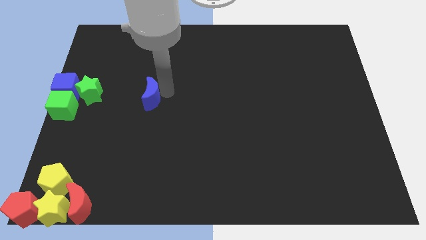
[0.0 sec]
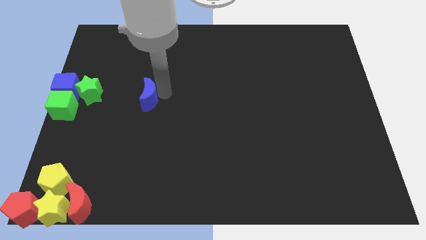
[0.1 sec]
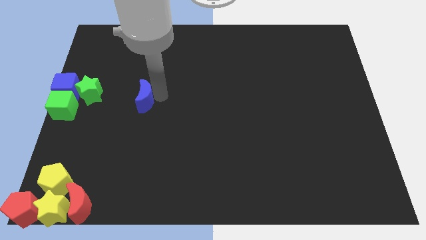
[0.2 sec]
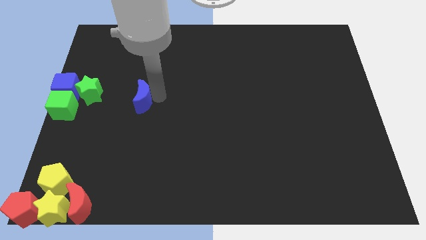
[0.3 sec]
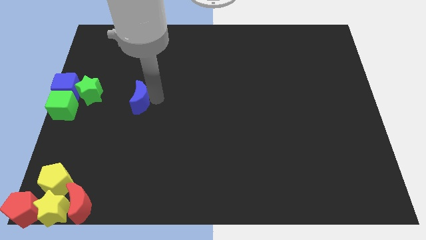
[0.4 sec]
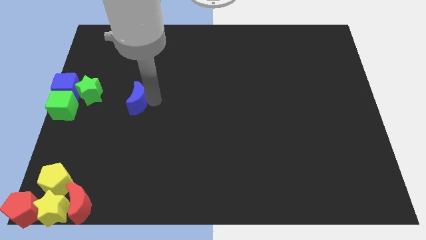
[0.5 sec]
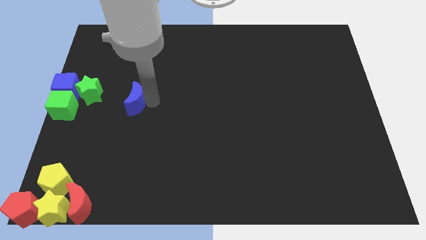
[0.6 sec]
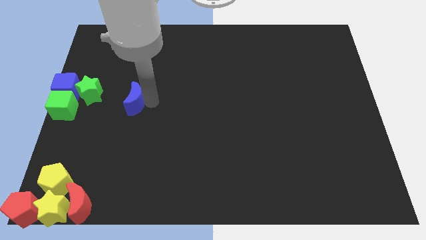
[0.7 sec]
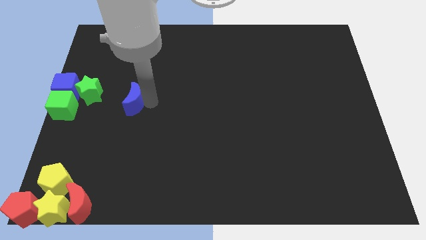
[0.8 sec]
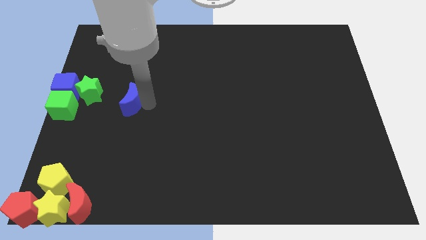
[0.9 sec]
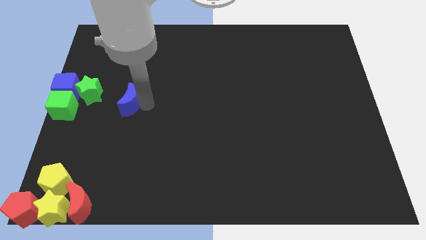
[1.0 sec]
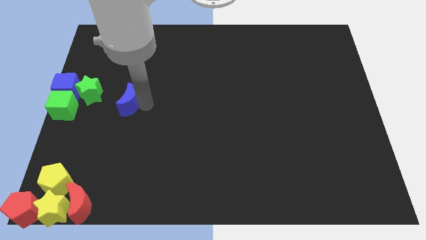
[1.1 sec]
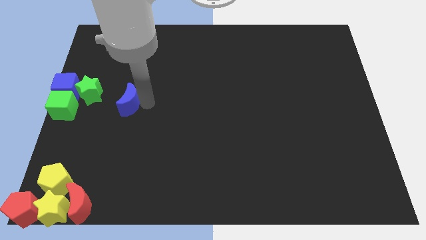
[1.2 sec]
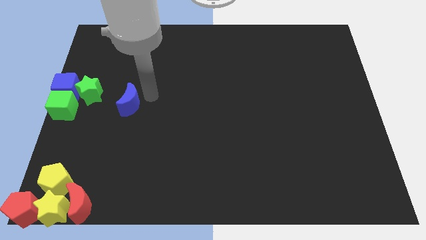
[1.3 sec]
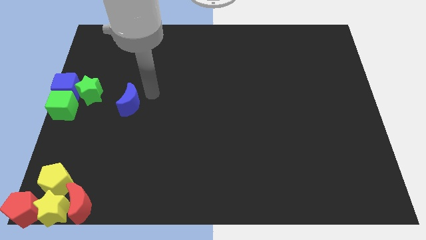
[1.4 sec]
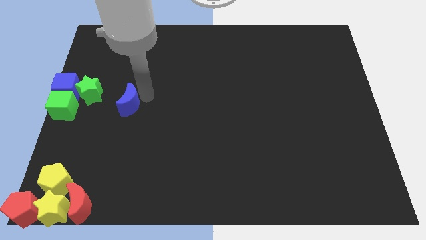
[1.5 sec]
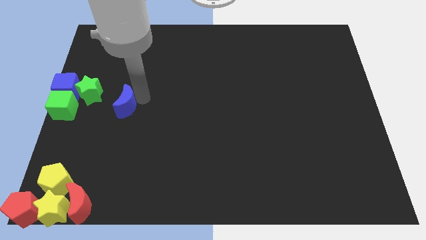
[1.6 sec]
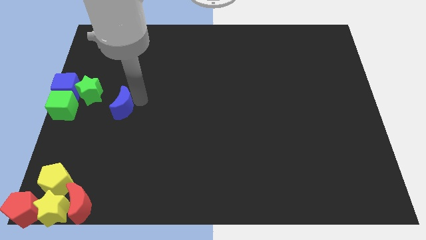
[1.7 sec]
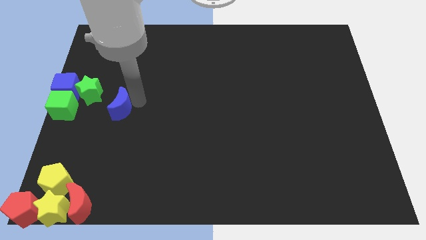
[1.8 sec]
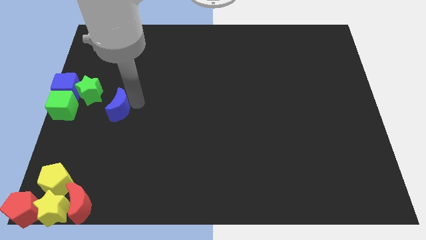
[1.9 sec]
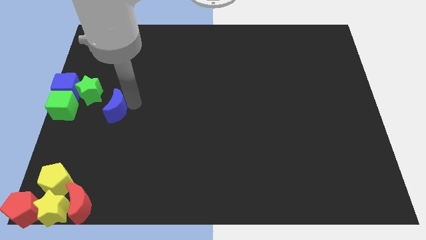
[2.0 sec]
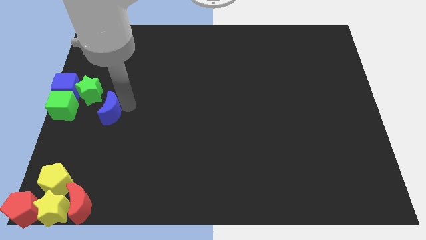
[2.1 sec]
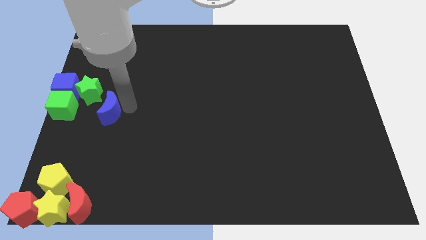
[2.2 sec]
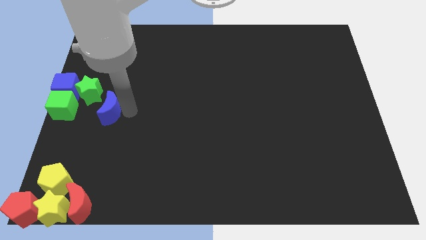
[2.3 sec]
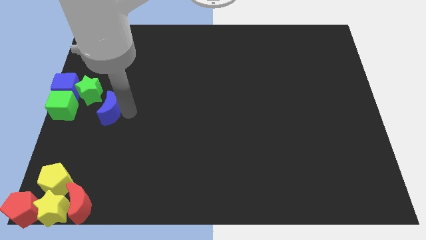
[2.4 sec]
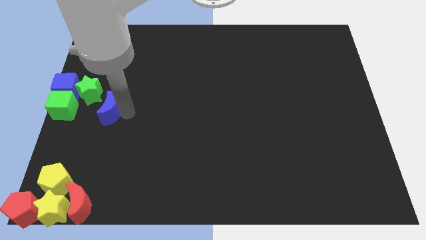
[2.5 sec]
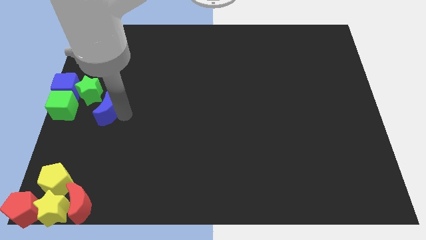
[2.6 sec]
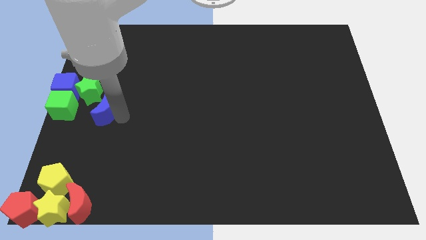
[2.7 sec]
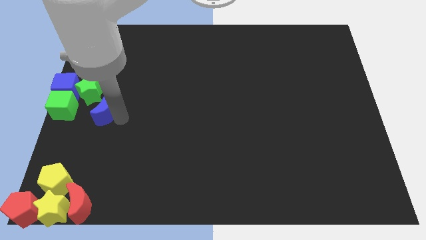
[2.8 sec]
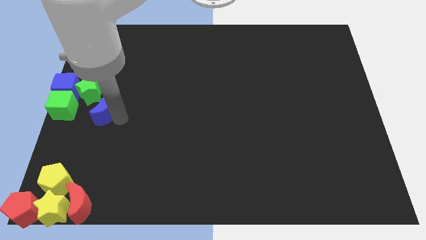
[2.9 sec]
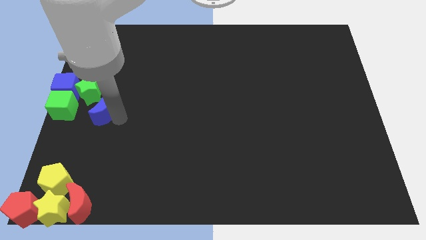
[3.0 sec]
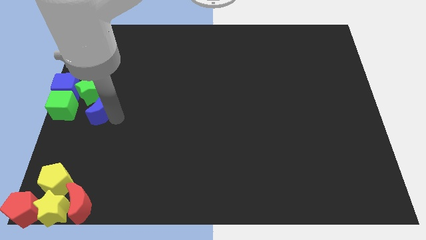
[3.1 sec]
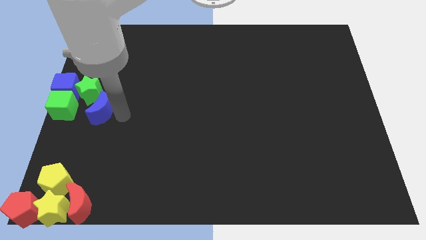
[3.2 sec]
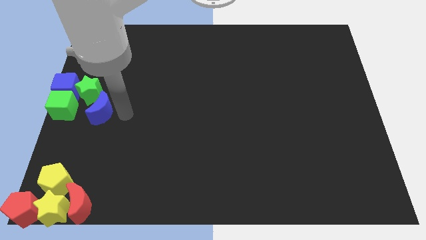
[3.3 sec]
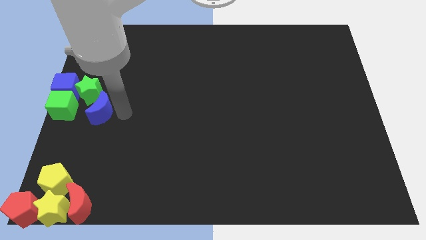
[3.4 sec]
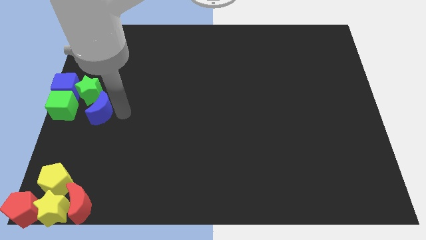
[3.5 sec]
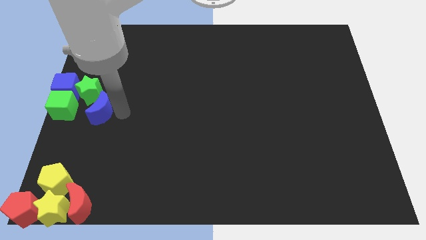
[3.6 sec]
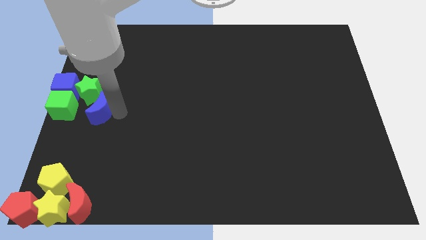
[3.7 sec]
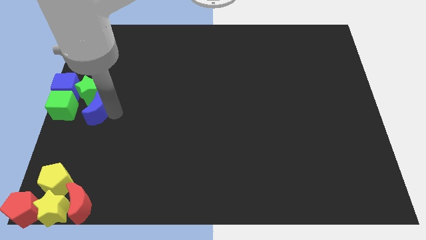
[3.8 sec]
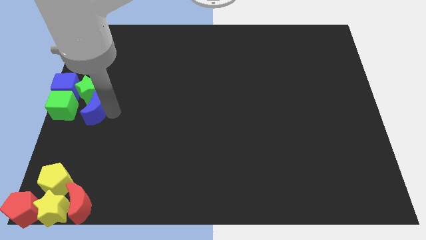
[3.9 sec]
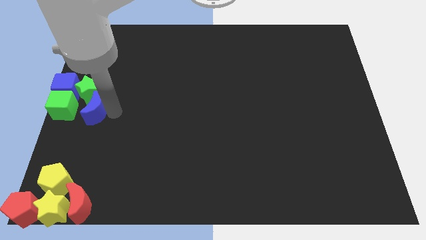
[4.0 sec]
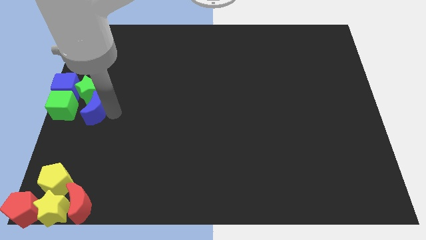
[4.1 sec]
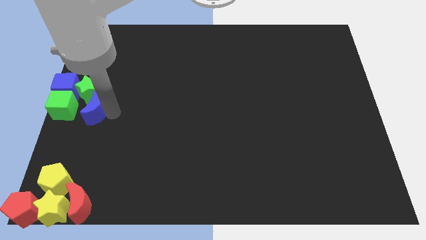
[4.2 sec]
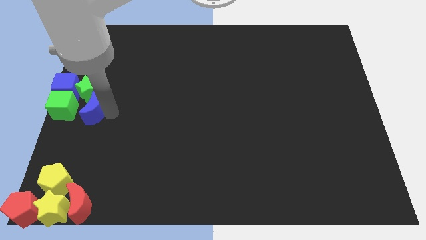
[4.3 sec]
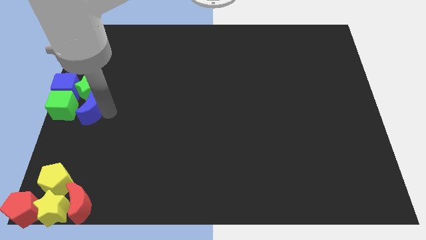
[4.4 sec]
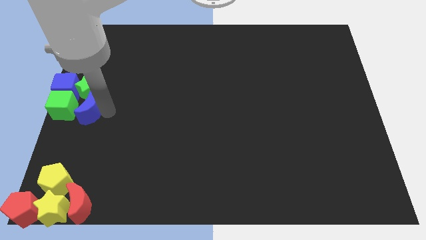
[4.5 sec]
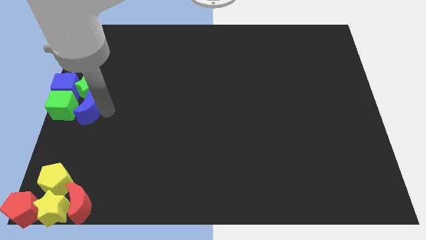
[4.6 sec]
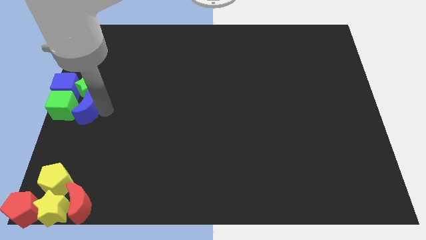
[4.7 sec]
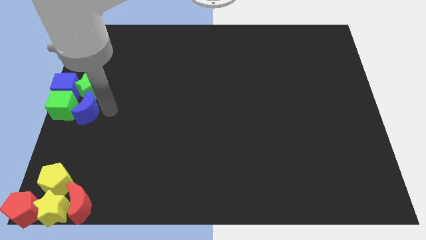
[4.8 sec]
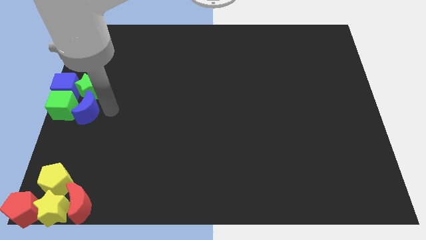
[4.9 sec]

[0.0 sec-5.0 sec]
place the blue crescent at the bottom of the green star

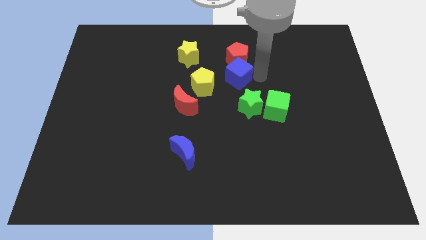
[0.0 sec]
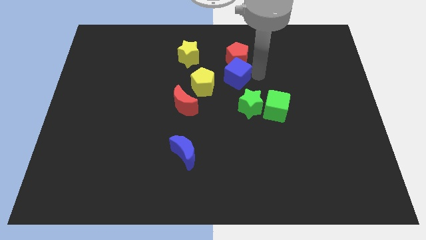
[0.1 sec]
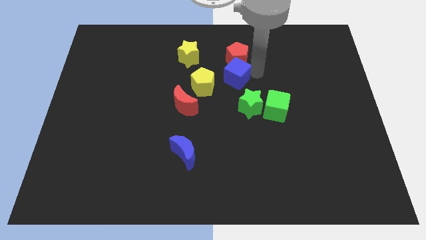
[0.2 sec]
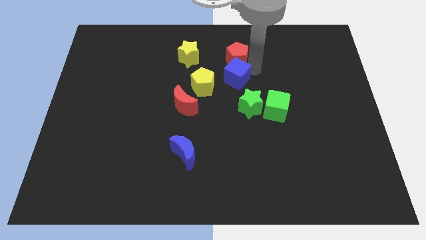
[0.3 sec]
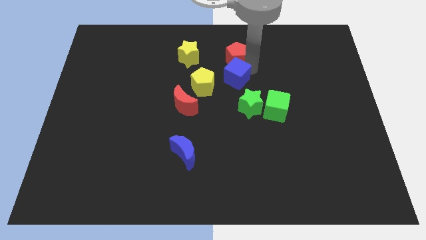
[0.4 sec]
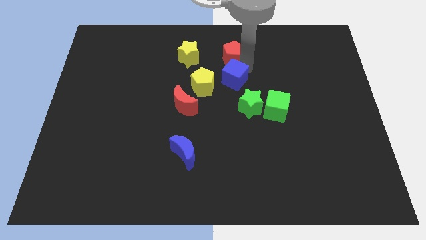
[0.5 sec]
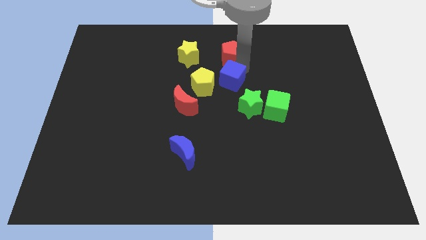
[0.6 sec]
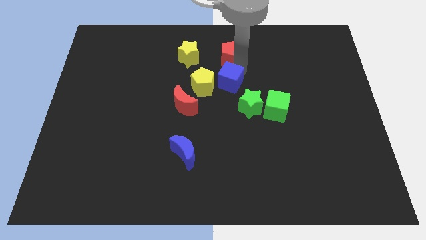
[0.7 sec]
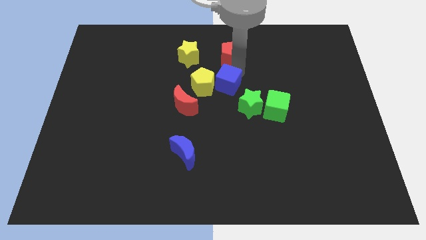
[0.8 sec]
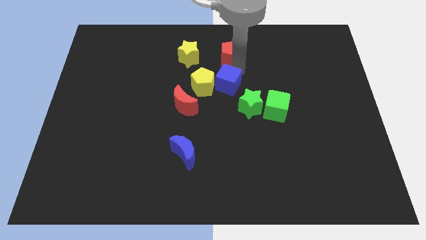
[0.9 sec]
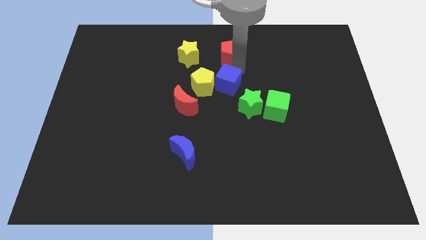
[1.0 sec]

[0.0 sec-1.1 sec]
move the blue cube to the right side of yellow pentagon

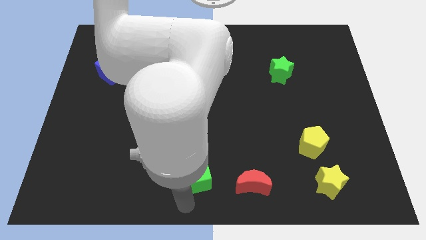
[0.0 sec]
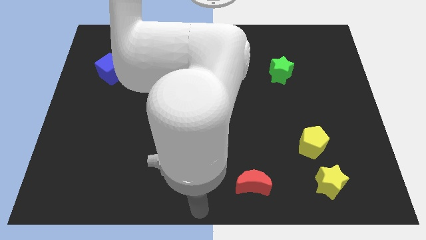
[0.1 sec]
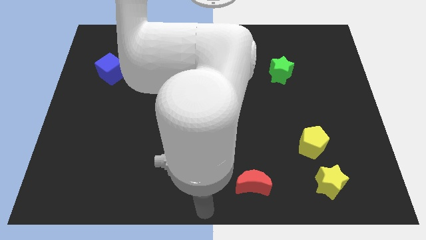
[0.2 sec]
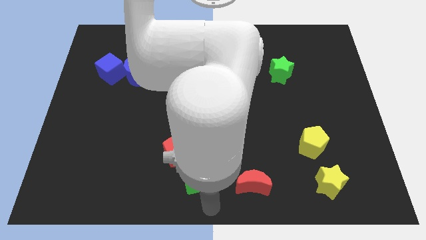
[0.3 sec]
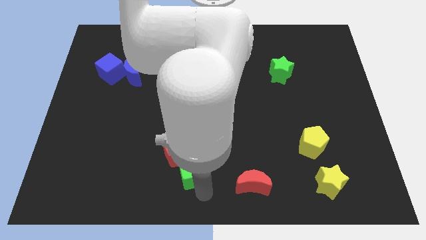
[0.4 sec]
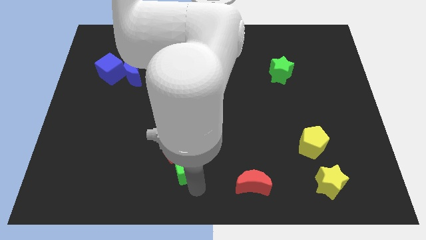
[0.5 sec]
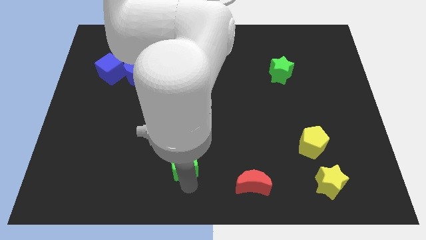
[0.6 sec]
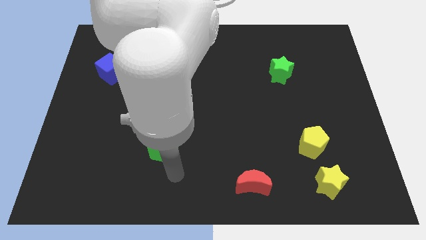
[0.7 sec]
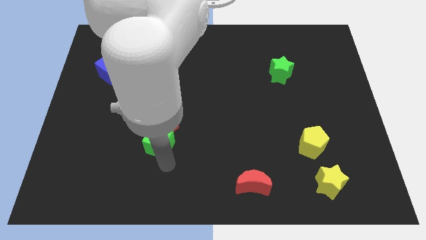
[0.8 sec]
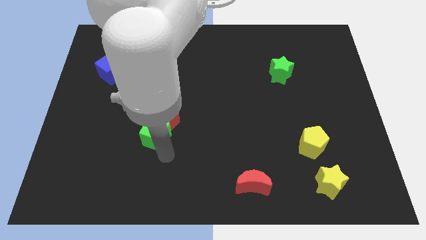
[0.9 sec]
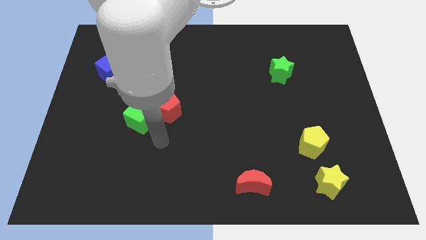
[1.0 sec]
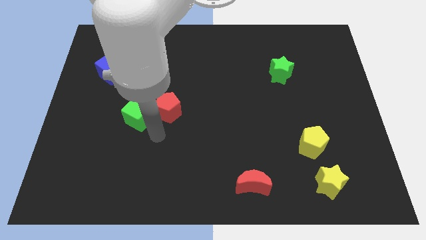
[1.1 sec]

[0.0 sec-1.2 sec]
push the green cube into the red pentagon

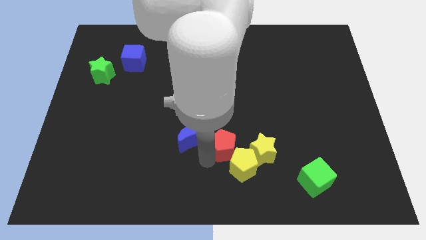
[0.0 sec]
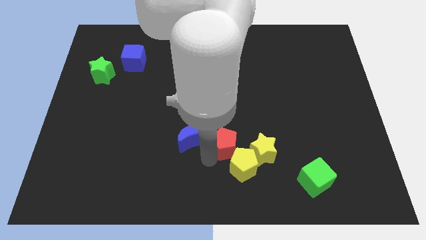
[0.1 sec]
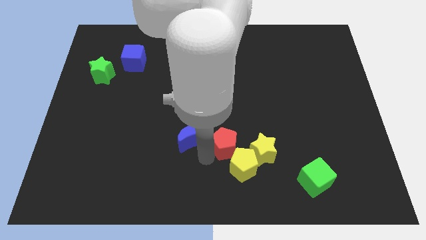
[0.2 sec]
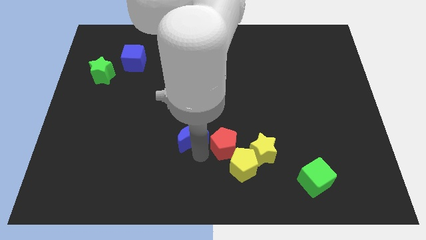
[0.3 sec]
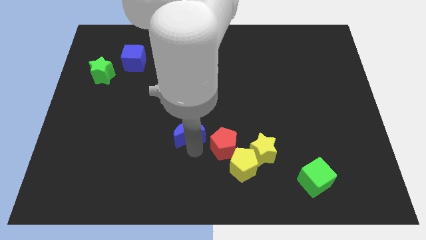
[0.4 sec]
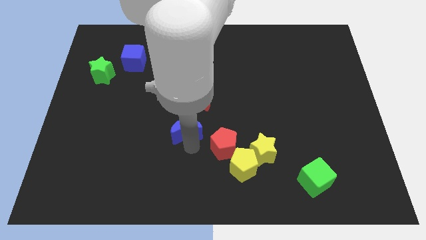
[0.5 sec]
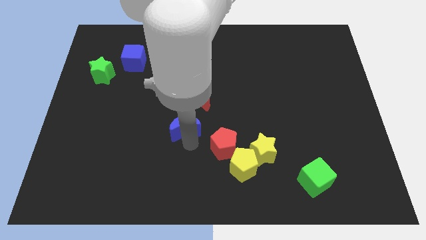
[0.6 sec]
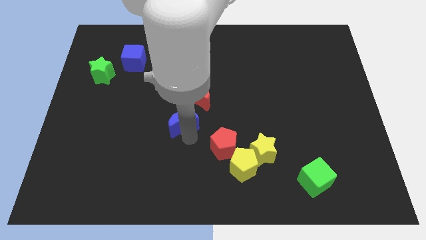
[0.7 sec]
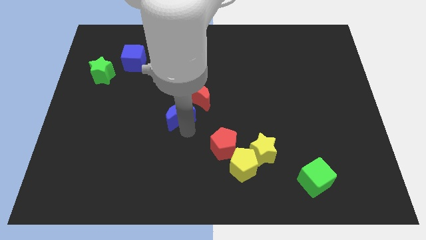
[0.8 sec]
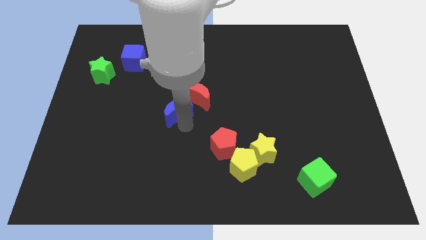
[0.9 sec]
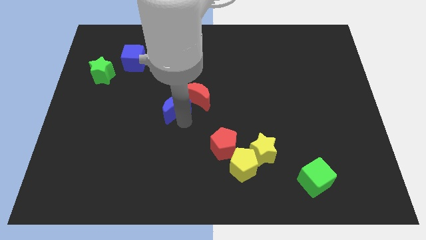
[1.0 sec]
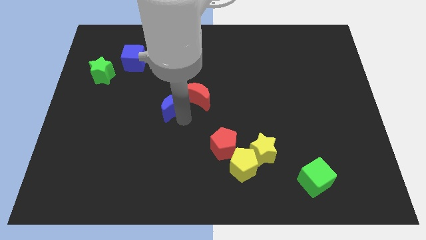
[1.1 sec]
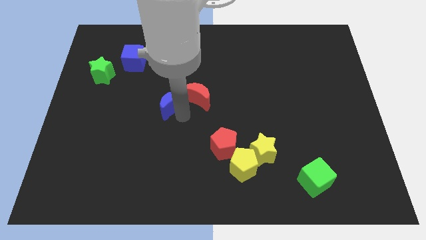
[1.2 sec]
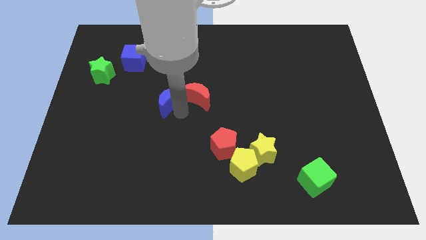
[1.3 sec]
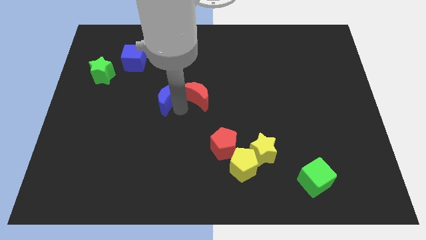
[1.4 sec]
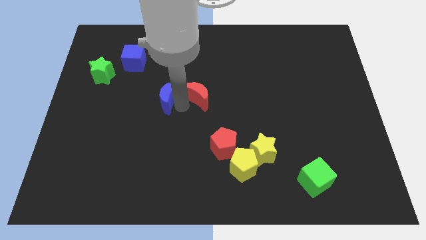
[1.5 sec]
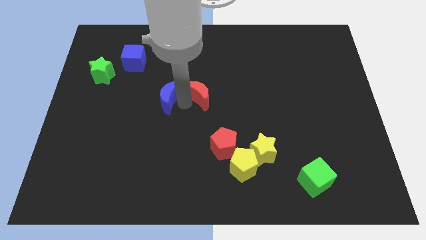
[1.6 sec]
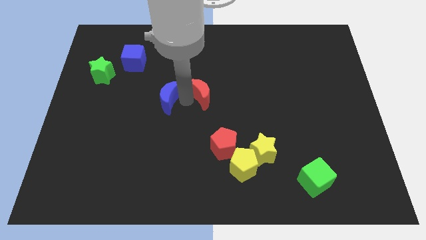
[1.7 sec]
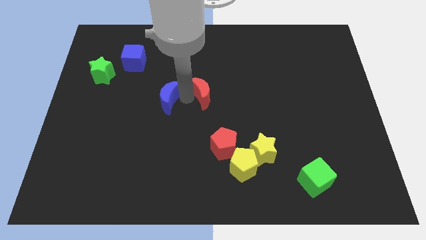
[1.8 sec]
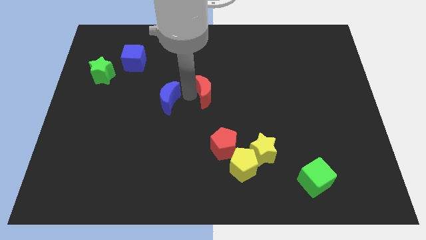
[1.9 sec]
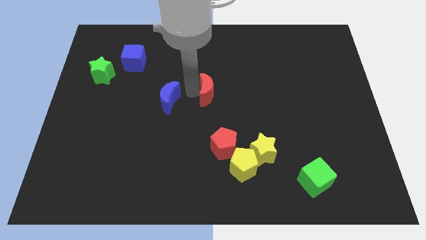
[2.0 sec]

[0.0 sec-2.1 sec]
move the blue moon away from the red pentagon
